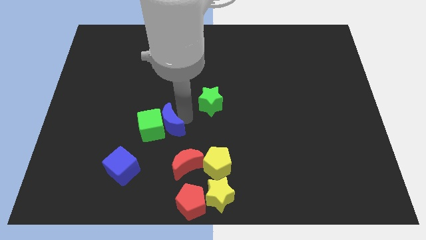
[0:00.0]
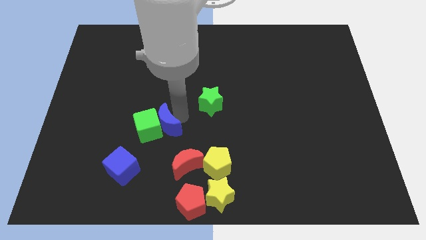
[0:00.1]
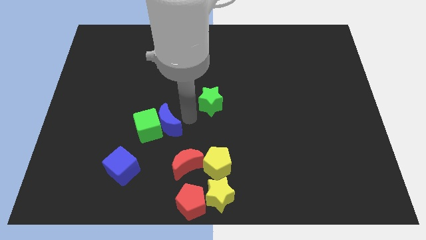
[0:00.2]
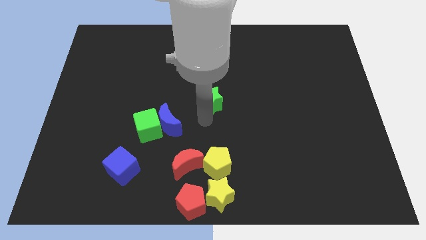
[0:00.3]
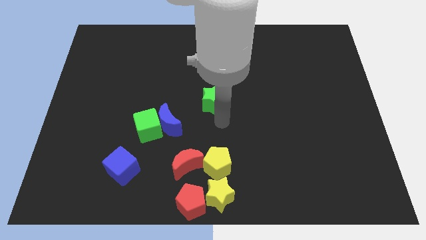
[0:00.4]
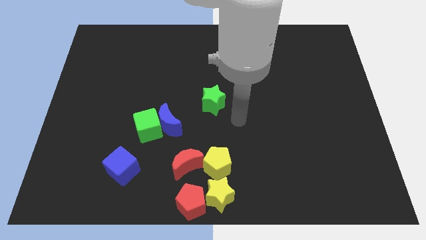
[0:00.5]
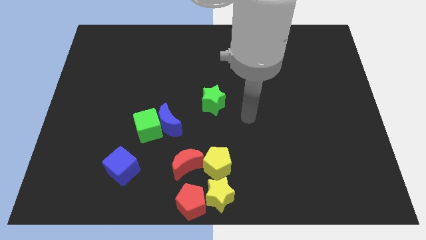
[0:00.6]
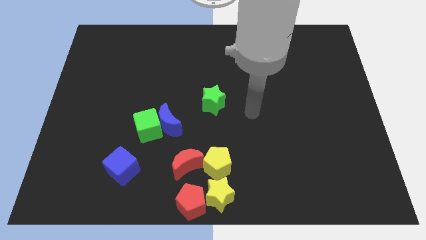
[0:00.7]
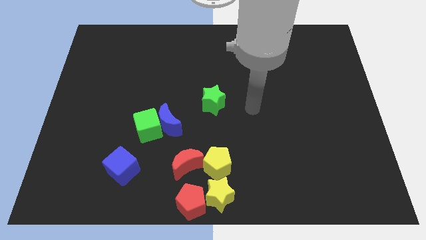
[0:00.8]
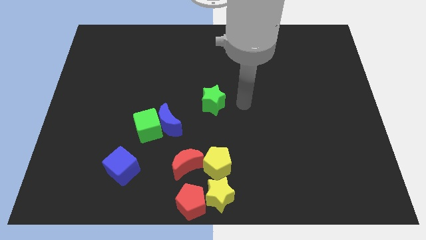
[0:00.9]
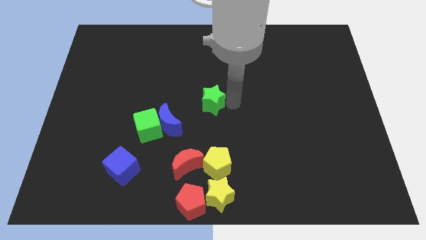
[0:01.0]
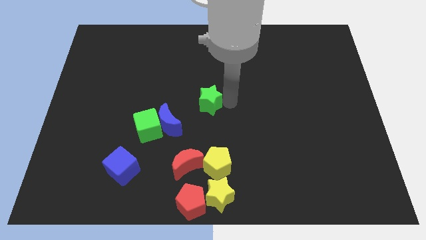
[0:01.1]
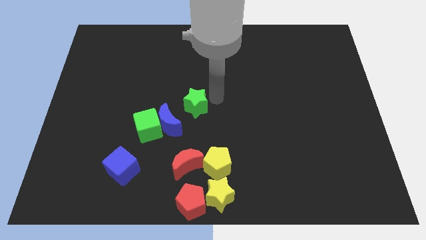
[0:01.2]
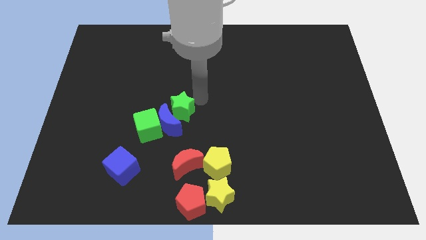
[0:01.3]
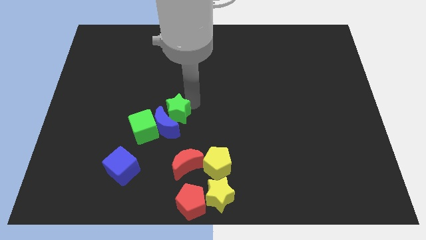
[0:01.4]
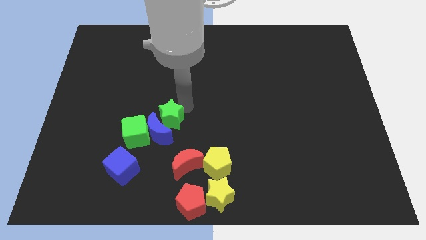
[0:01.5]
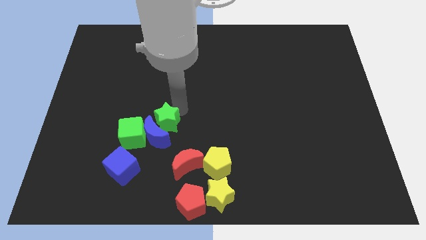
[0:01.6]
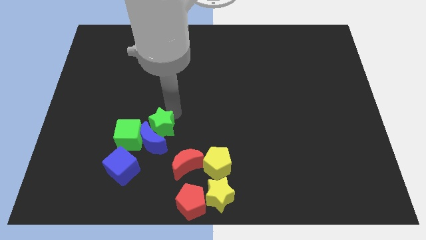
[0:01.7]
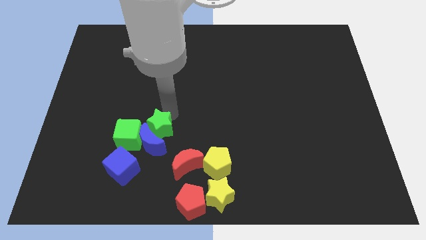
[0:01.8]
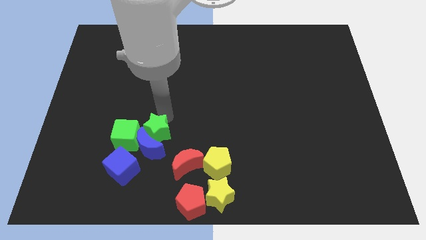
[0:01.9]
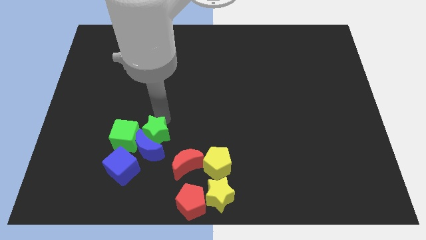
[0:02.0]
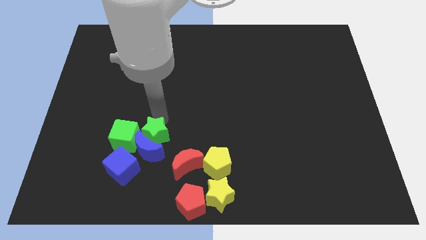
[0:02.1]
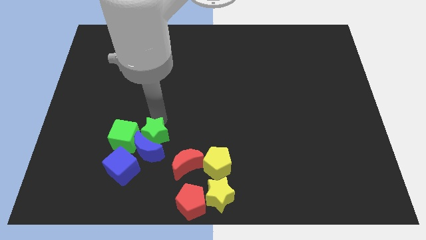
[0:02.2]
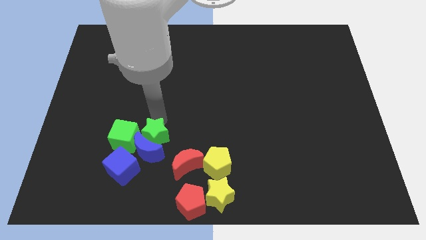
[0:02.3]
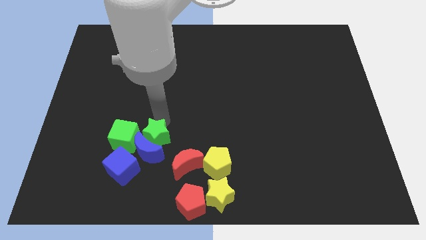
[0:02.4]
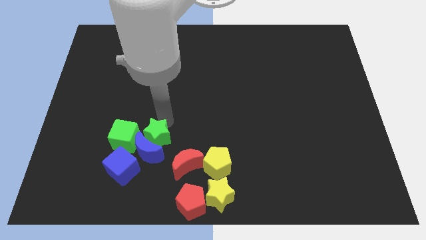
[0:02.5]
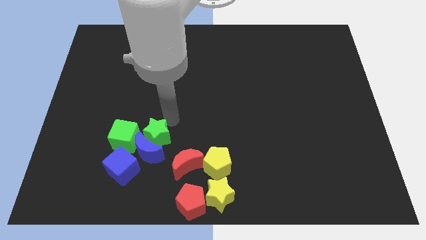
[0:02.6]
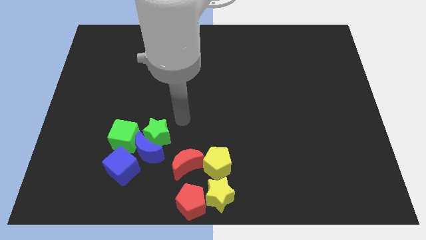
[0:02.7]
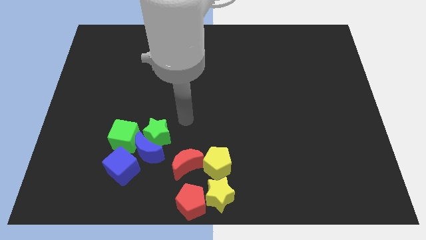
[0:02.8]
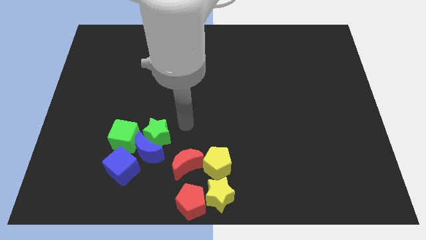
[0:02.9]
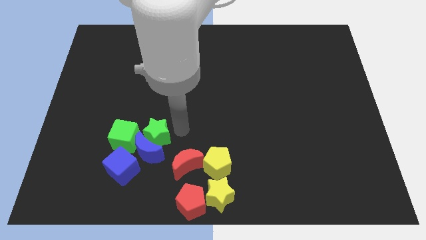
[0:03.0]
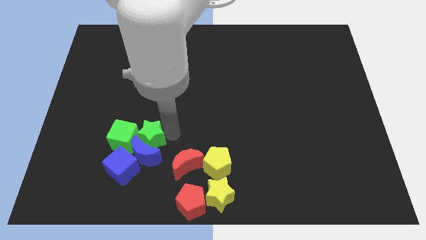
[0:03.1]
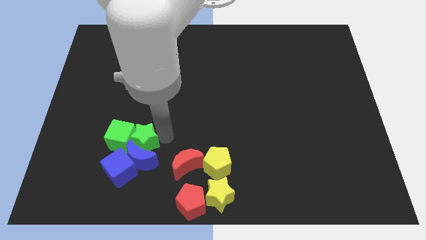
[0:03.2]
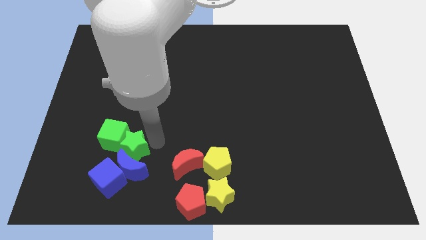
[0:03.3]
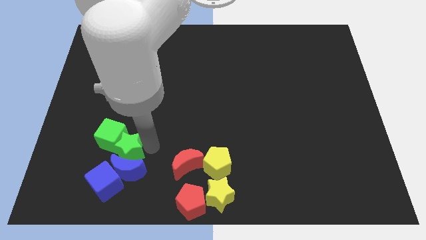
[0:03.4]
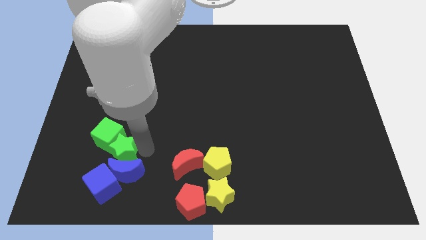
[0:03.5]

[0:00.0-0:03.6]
move green star into blue moon

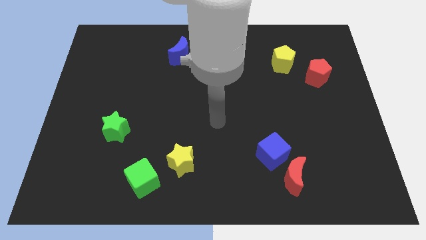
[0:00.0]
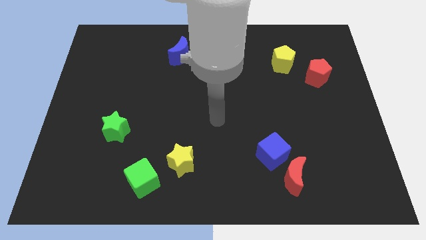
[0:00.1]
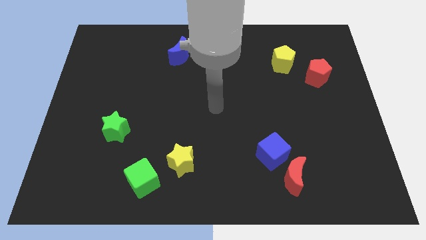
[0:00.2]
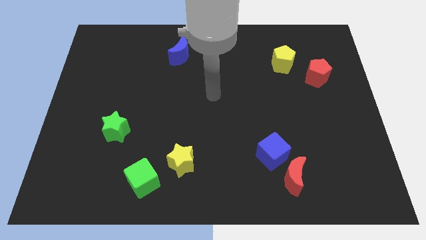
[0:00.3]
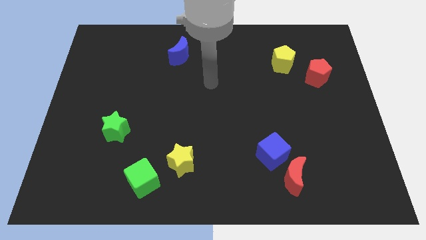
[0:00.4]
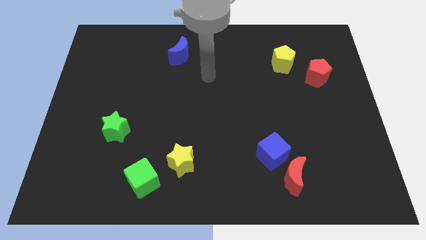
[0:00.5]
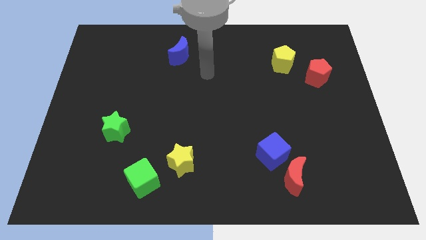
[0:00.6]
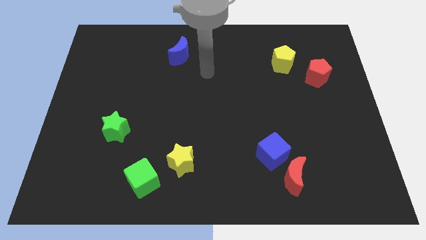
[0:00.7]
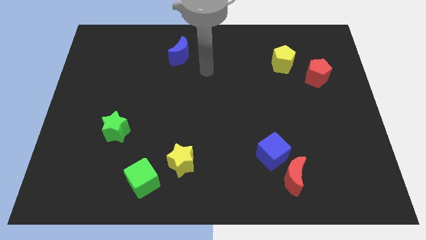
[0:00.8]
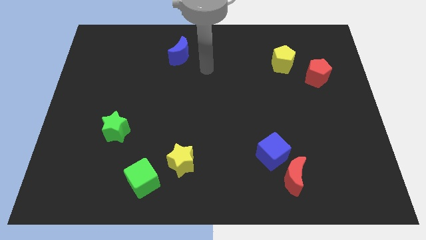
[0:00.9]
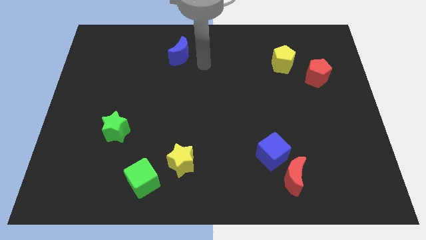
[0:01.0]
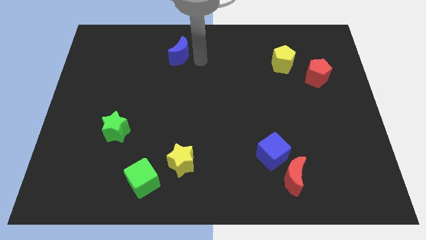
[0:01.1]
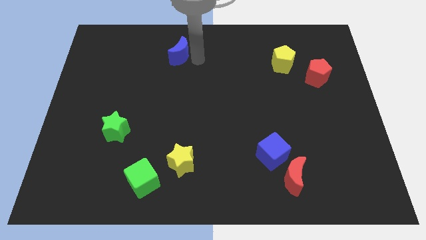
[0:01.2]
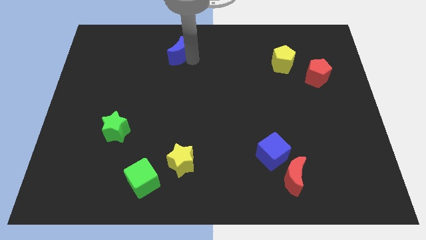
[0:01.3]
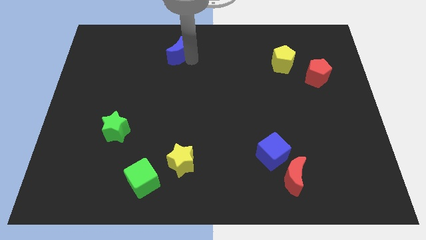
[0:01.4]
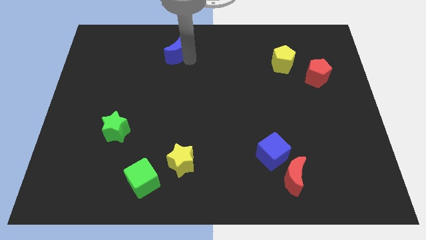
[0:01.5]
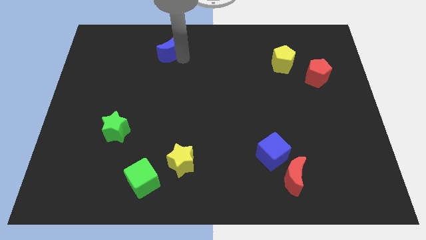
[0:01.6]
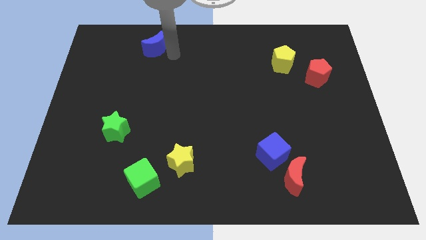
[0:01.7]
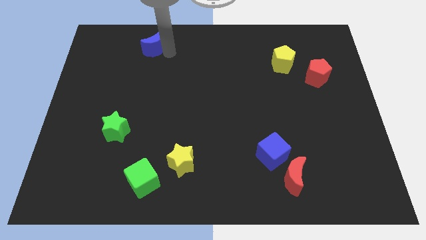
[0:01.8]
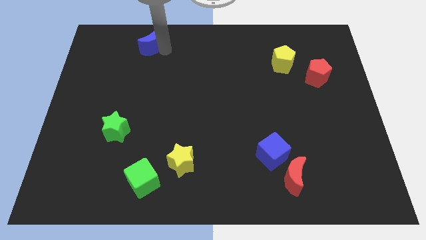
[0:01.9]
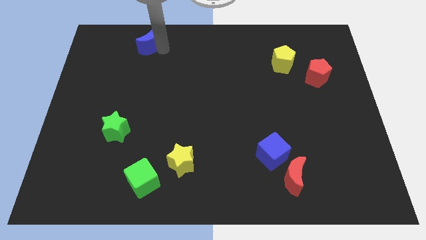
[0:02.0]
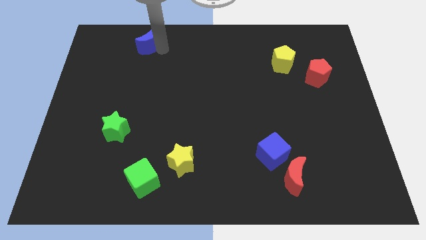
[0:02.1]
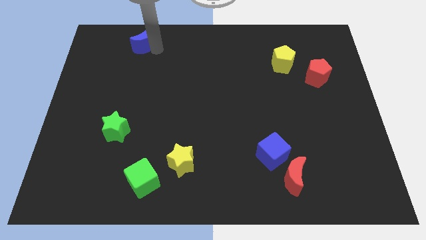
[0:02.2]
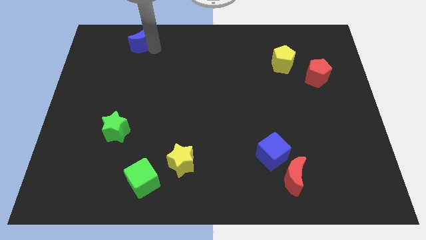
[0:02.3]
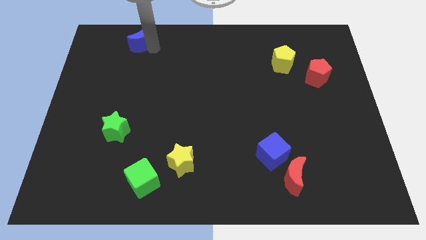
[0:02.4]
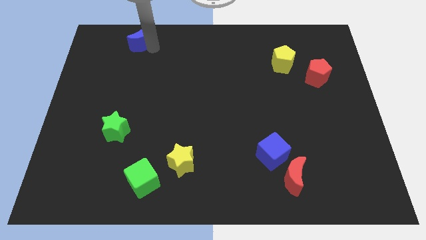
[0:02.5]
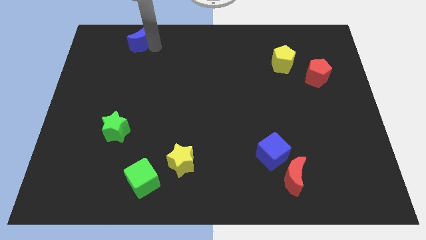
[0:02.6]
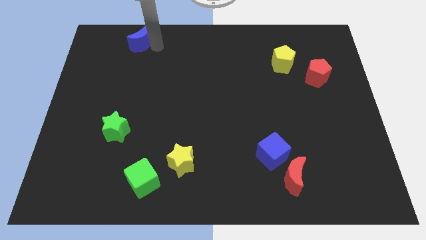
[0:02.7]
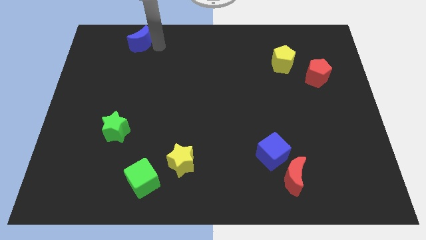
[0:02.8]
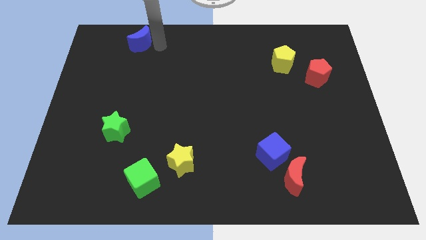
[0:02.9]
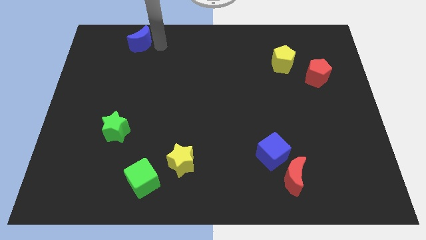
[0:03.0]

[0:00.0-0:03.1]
slide blue moon towards top left

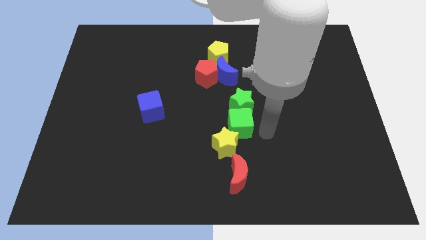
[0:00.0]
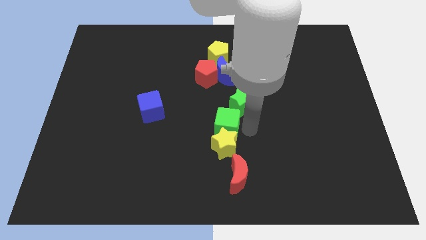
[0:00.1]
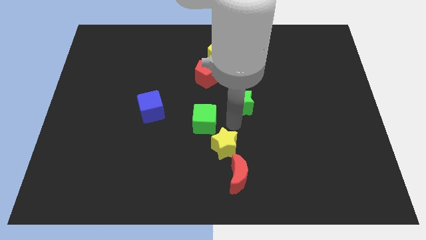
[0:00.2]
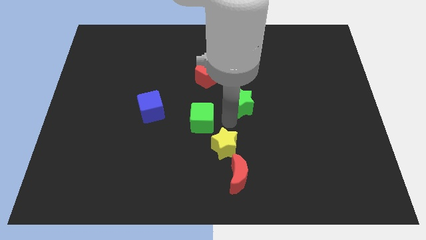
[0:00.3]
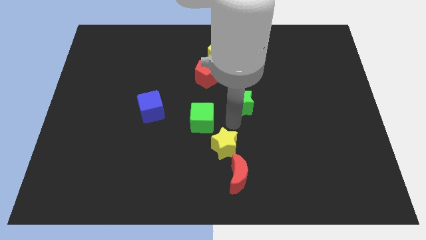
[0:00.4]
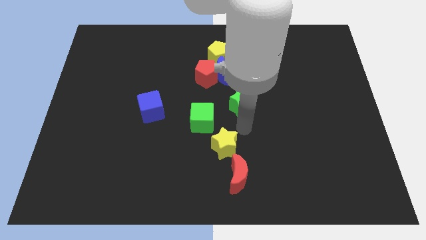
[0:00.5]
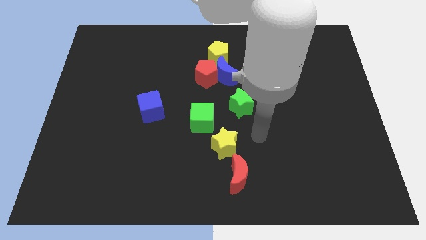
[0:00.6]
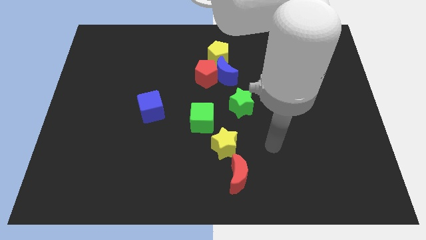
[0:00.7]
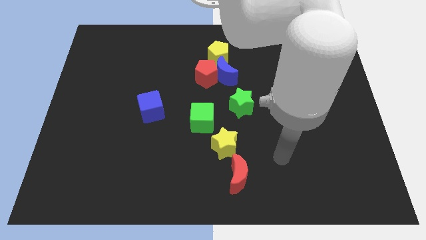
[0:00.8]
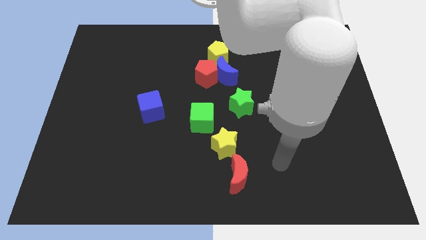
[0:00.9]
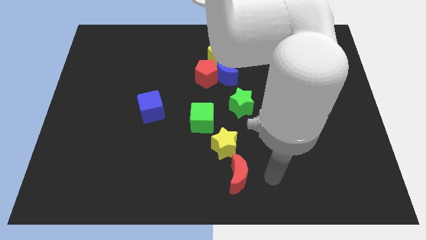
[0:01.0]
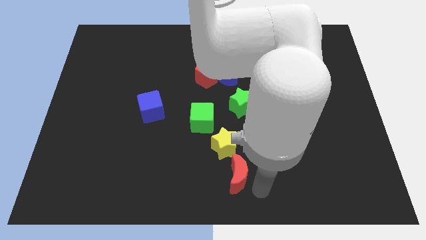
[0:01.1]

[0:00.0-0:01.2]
separate green cube from yellow star and green star

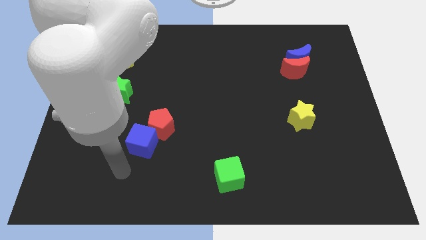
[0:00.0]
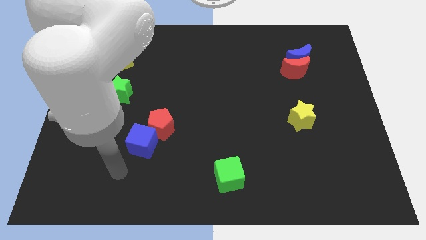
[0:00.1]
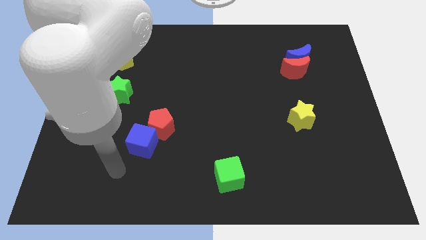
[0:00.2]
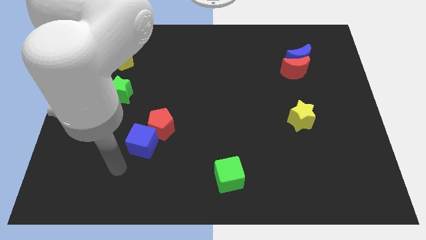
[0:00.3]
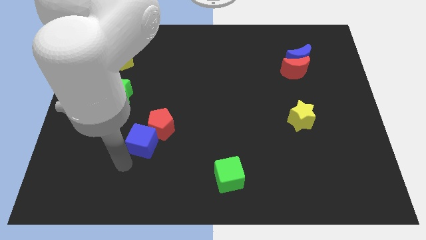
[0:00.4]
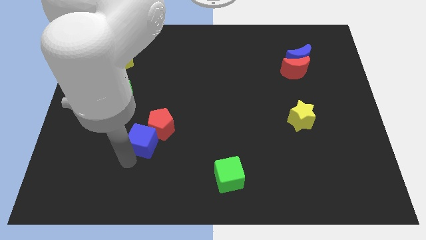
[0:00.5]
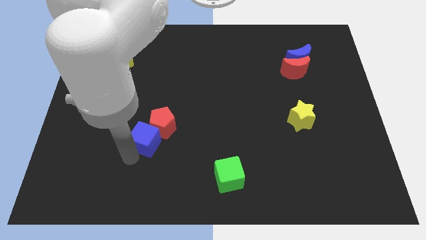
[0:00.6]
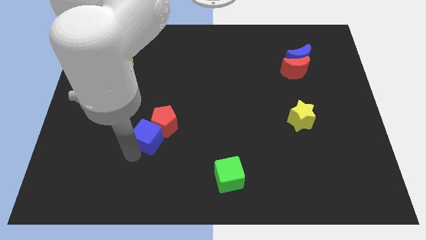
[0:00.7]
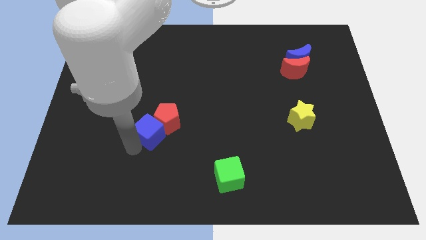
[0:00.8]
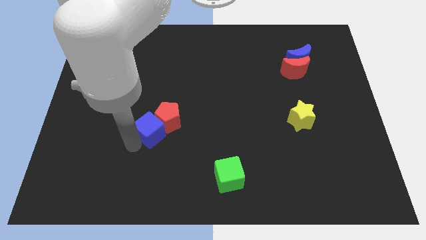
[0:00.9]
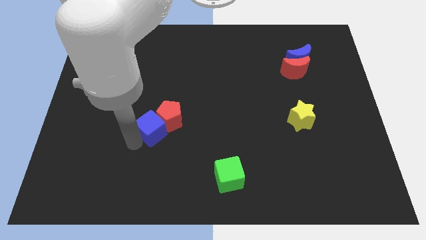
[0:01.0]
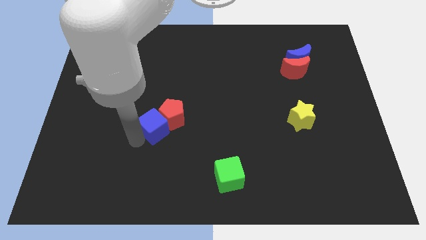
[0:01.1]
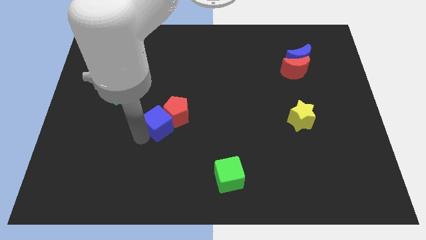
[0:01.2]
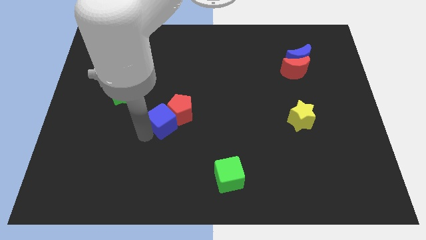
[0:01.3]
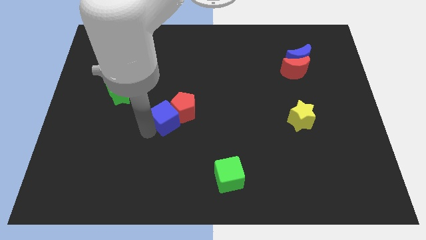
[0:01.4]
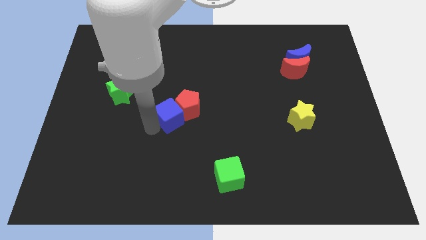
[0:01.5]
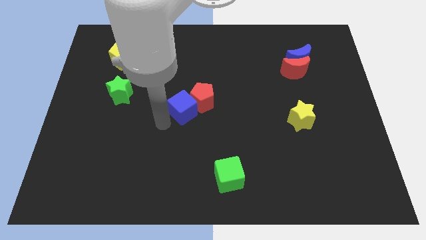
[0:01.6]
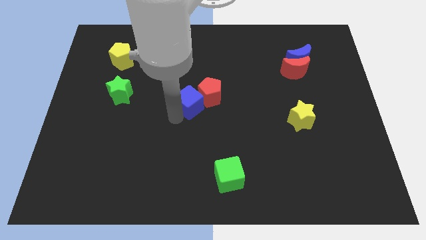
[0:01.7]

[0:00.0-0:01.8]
push the blue cube and red pentagon to the middle of the board
